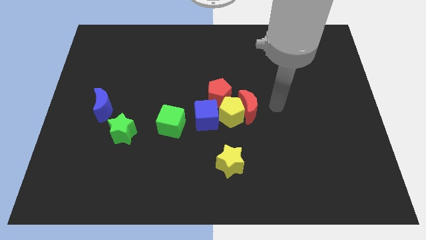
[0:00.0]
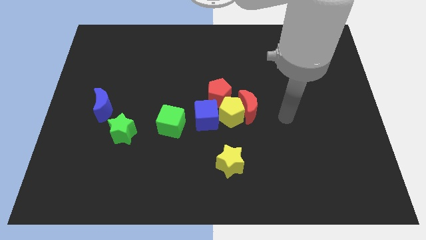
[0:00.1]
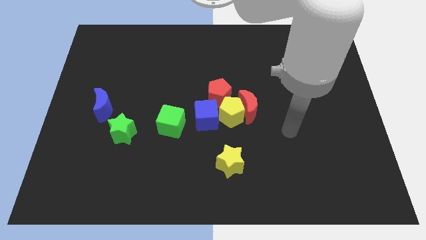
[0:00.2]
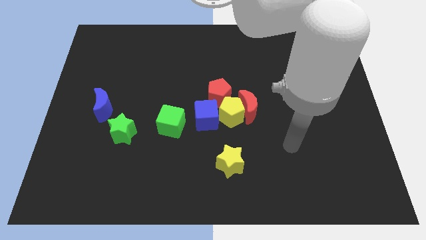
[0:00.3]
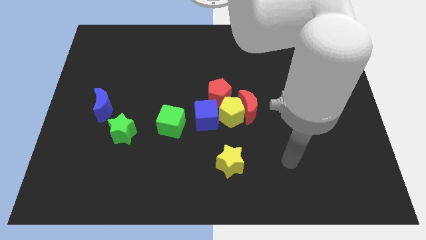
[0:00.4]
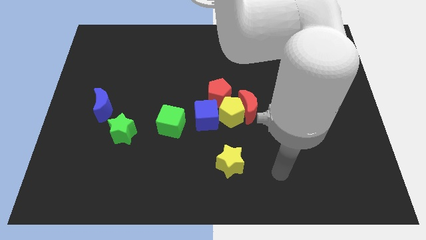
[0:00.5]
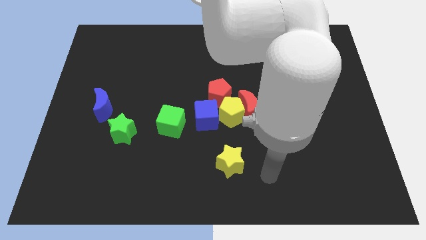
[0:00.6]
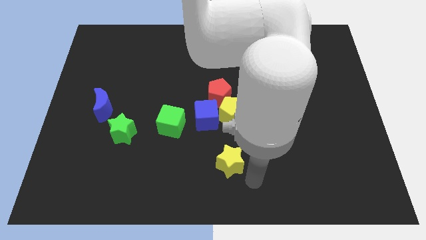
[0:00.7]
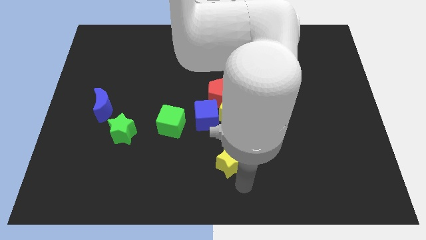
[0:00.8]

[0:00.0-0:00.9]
place the arm below the yellow star

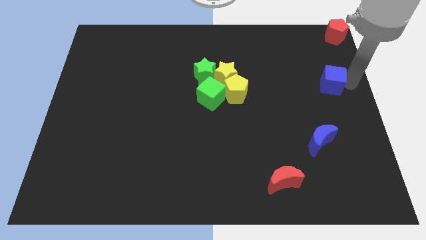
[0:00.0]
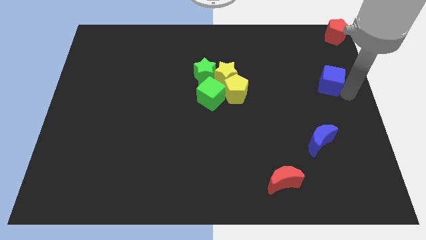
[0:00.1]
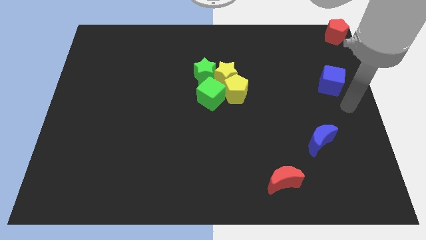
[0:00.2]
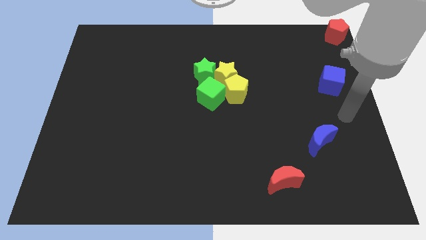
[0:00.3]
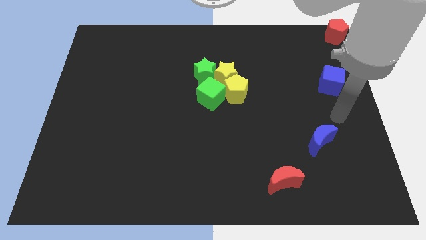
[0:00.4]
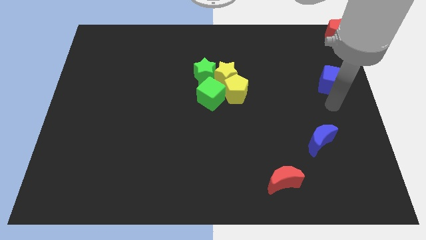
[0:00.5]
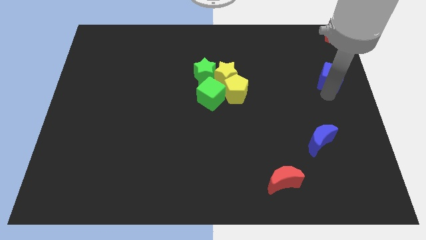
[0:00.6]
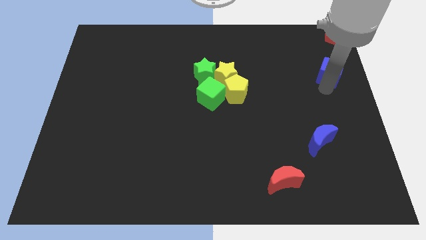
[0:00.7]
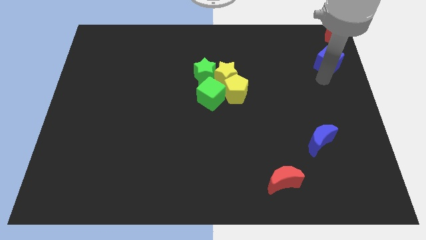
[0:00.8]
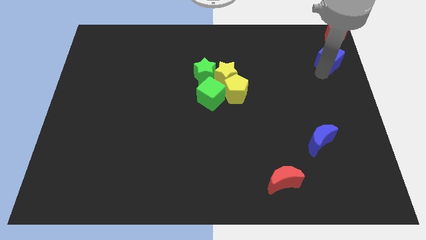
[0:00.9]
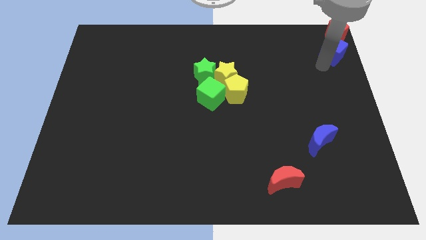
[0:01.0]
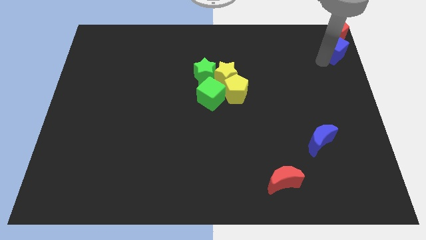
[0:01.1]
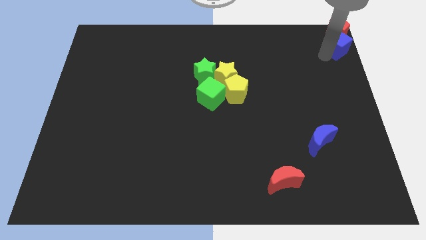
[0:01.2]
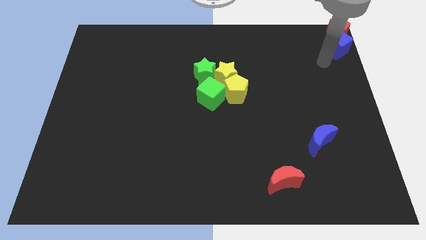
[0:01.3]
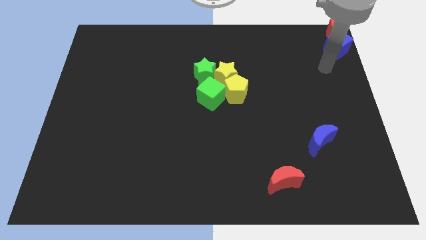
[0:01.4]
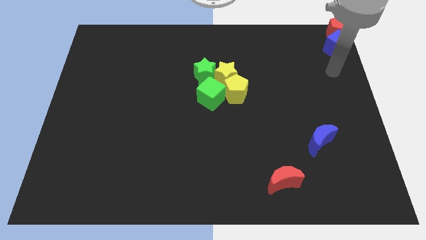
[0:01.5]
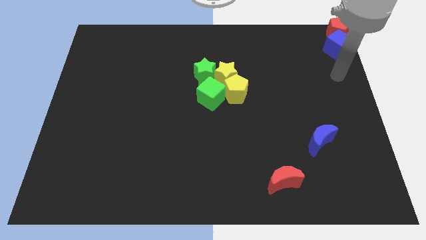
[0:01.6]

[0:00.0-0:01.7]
push the blue cube towards the red pentagon

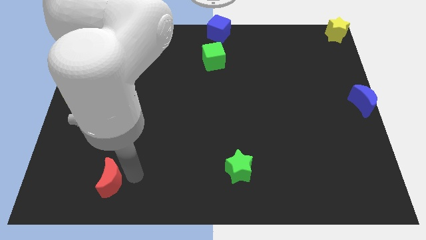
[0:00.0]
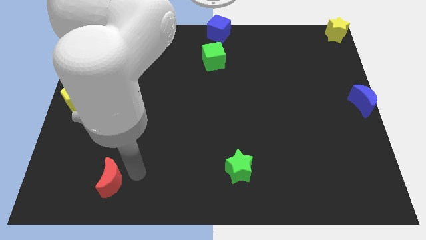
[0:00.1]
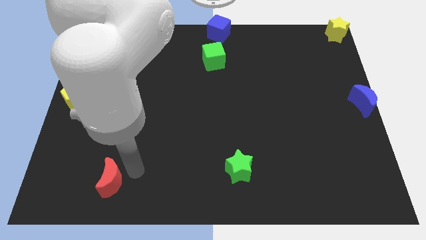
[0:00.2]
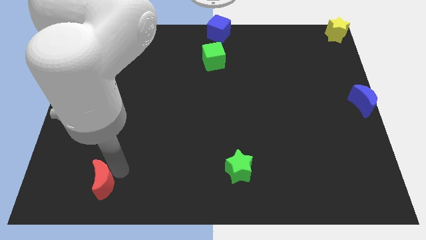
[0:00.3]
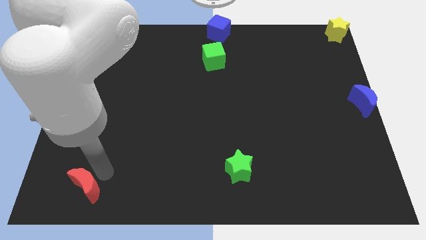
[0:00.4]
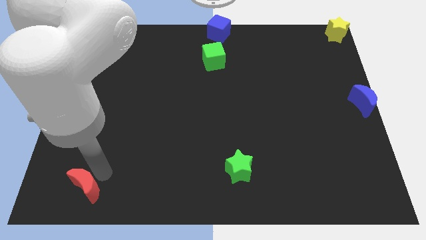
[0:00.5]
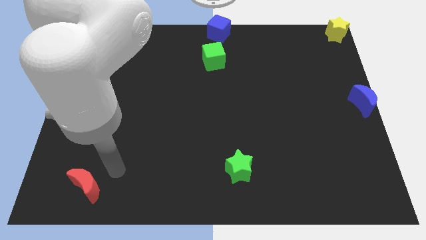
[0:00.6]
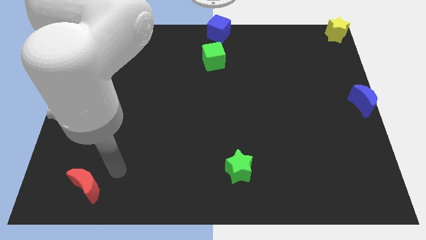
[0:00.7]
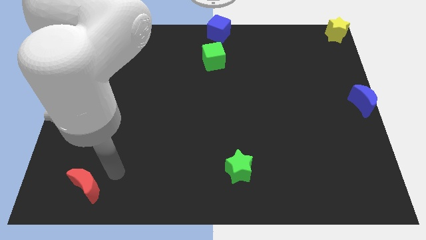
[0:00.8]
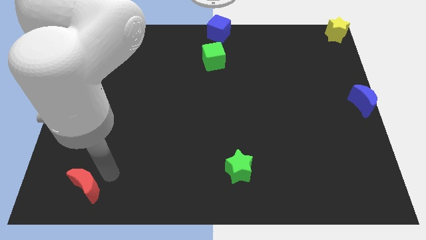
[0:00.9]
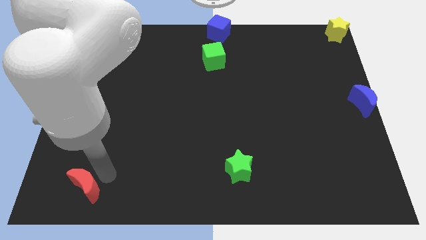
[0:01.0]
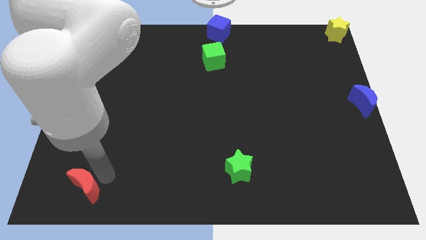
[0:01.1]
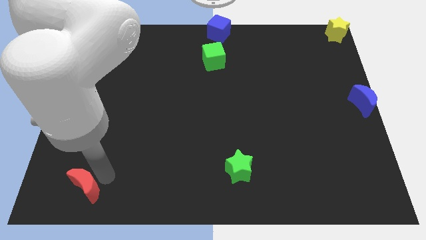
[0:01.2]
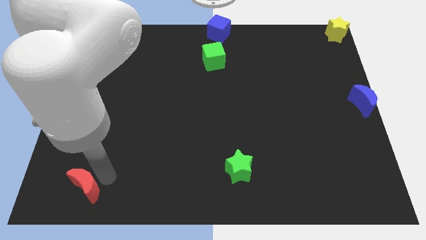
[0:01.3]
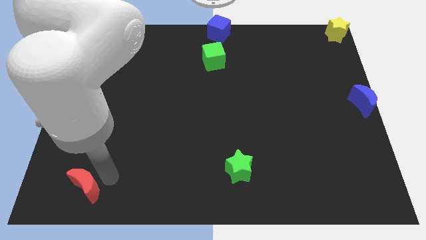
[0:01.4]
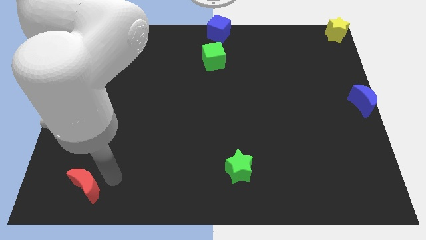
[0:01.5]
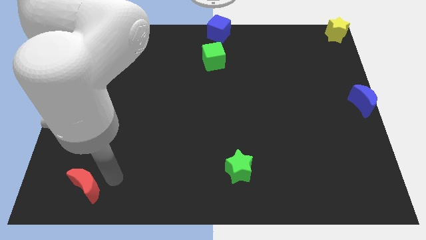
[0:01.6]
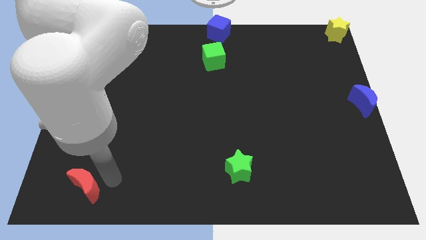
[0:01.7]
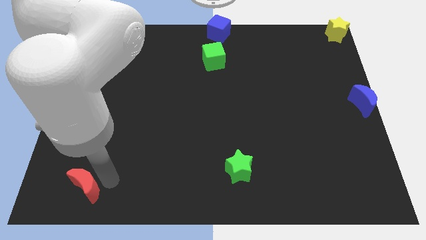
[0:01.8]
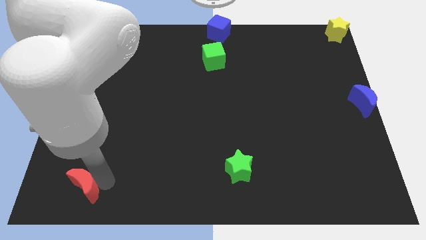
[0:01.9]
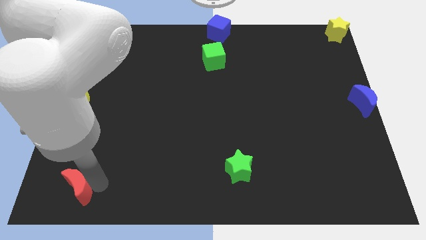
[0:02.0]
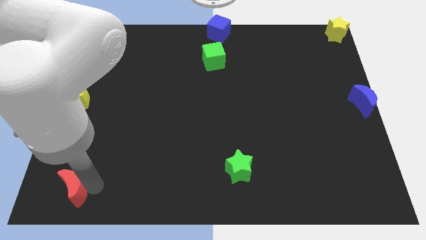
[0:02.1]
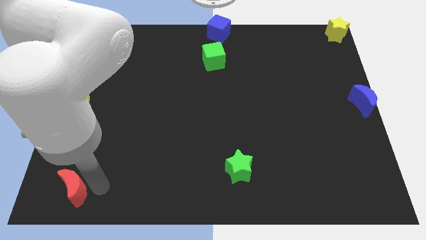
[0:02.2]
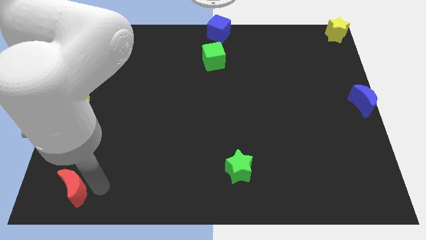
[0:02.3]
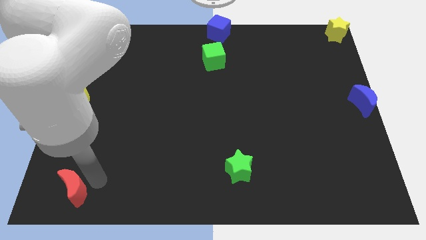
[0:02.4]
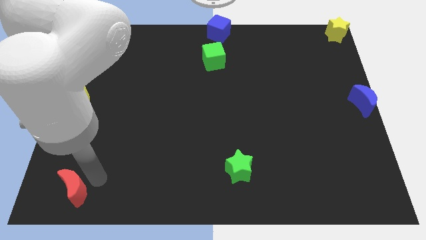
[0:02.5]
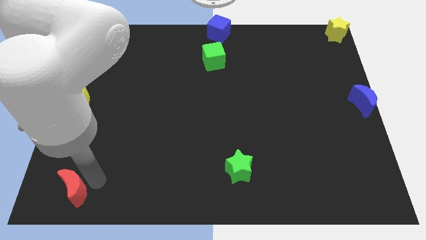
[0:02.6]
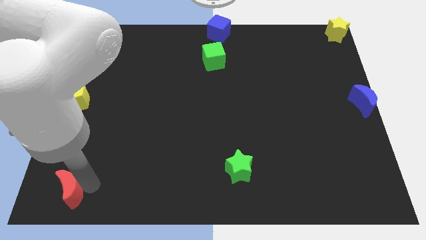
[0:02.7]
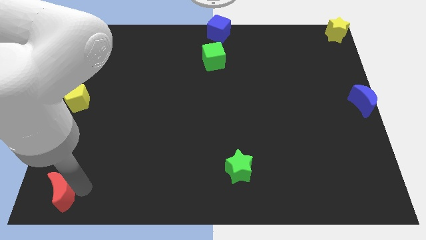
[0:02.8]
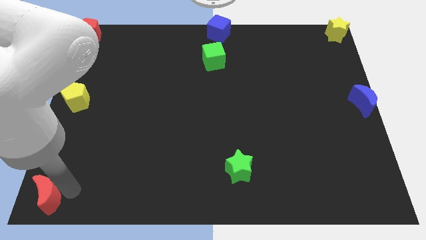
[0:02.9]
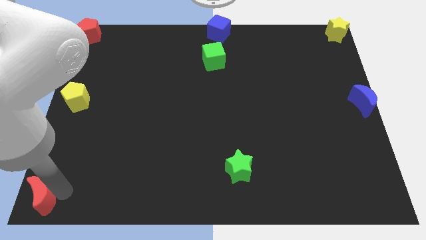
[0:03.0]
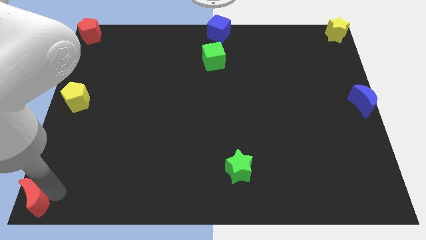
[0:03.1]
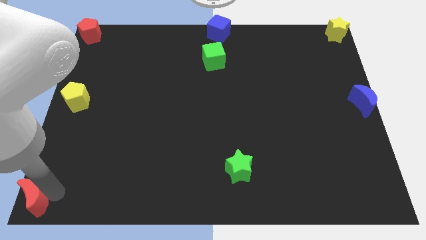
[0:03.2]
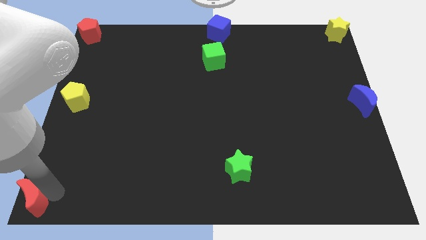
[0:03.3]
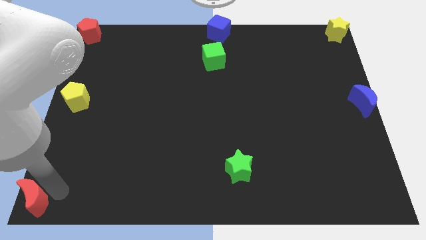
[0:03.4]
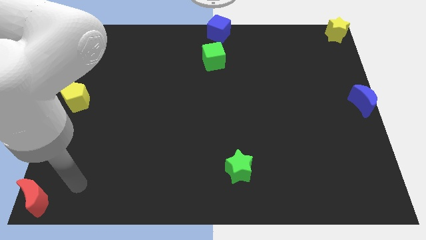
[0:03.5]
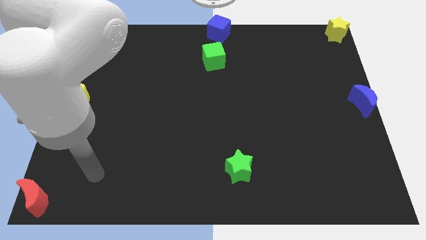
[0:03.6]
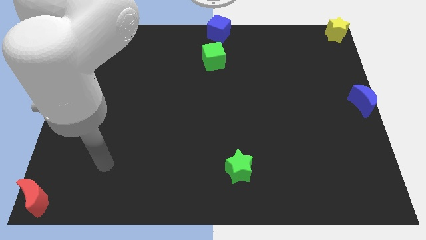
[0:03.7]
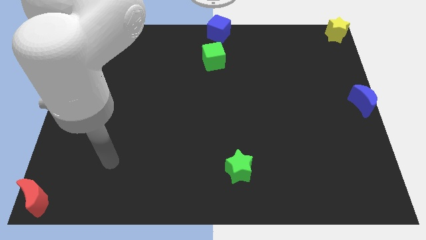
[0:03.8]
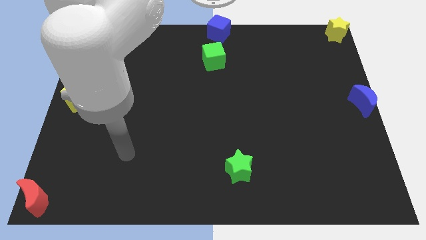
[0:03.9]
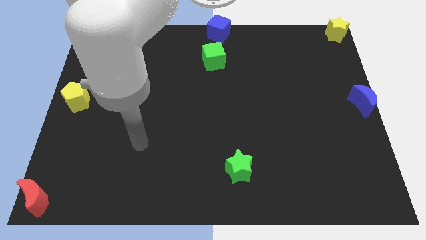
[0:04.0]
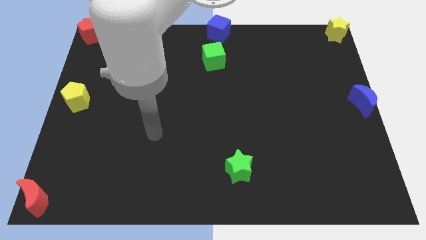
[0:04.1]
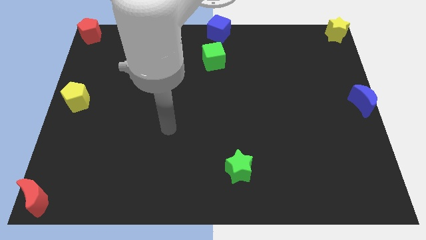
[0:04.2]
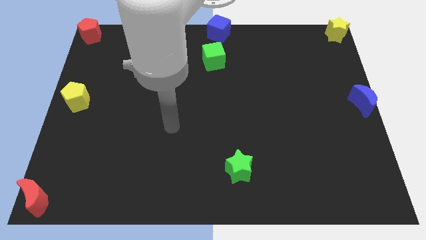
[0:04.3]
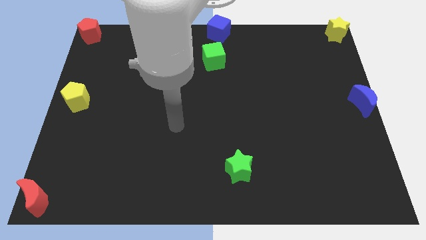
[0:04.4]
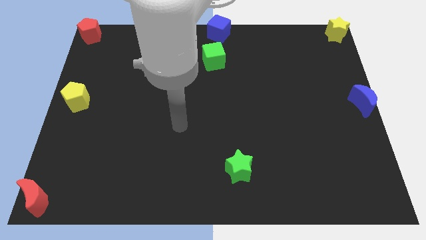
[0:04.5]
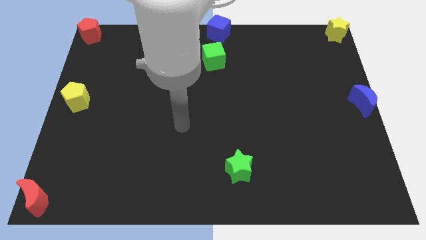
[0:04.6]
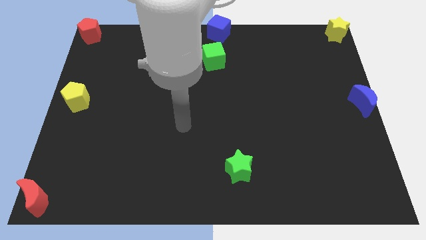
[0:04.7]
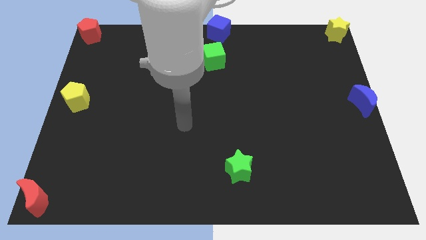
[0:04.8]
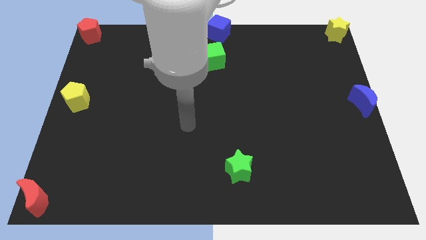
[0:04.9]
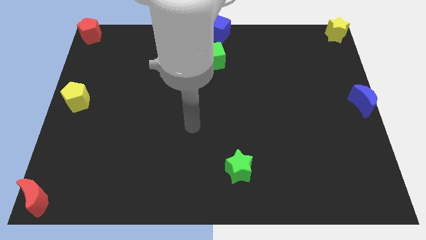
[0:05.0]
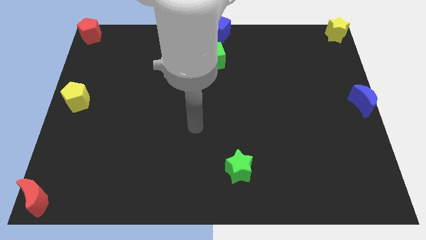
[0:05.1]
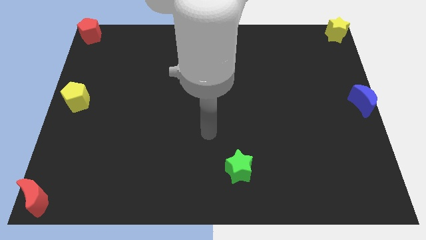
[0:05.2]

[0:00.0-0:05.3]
move the red crescent to the bottom left corner

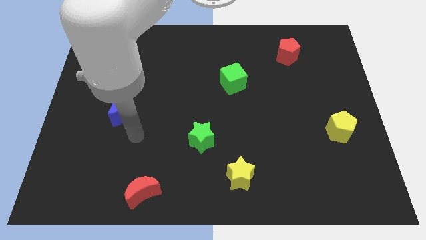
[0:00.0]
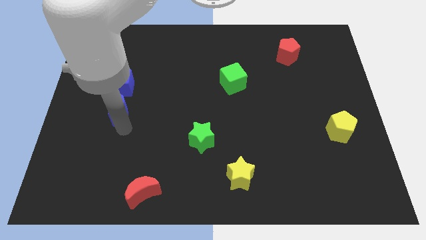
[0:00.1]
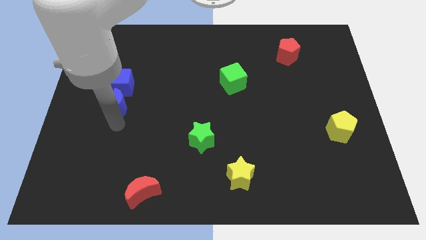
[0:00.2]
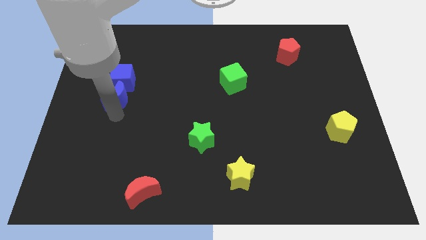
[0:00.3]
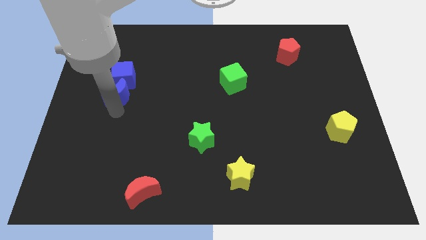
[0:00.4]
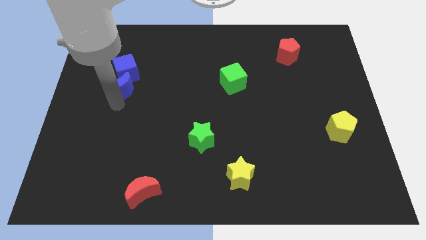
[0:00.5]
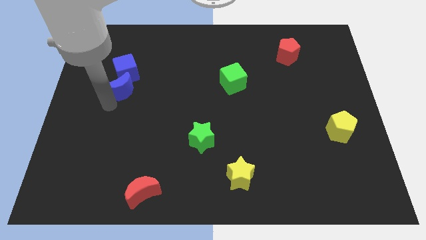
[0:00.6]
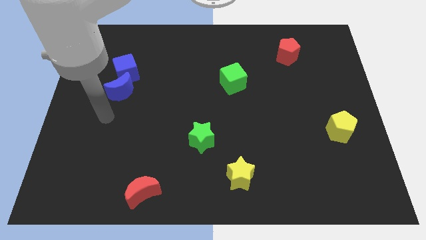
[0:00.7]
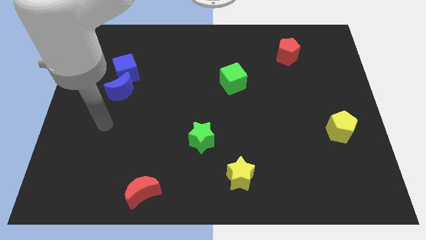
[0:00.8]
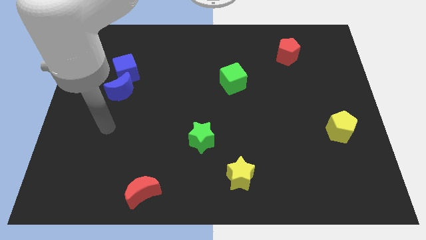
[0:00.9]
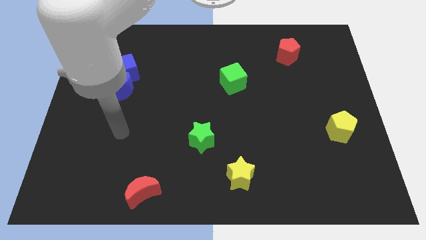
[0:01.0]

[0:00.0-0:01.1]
push blue moon and blue cube slightly upwards
